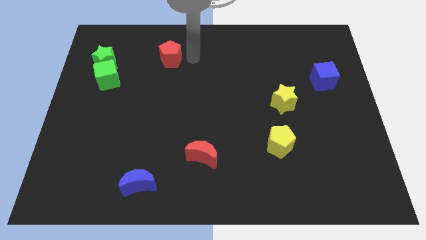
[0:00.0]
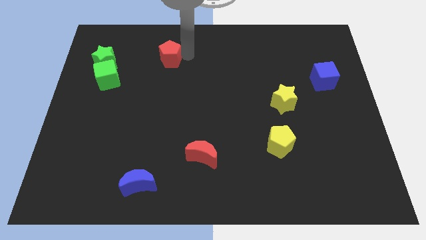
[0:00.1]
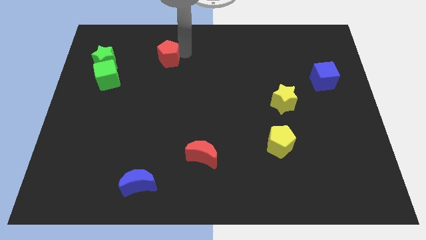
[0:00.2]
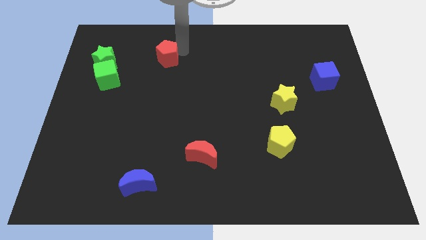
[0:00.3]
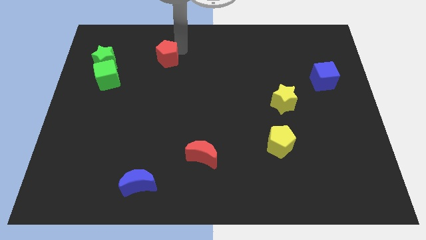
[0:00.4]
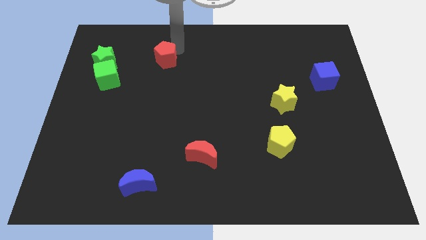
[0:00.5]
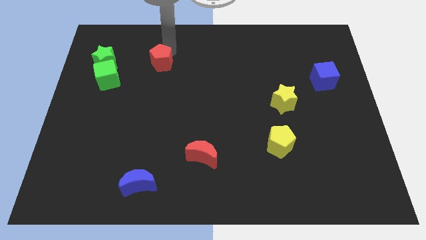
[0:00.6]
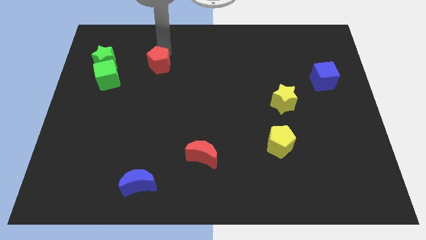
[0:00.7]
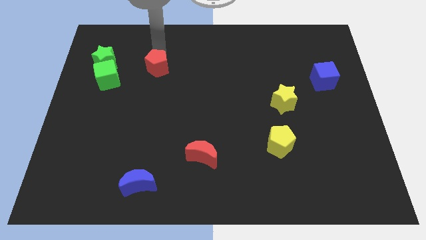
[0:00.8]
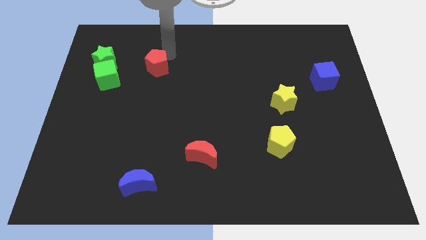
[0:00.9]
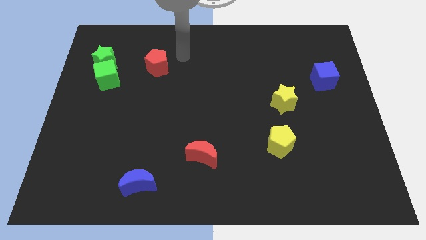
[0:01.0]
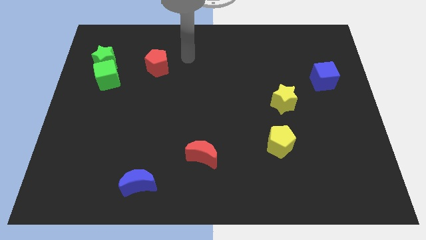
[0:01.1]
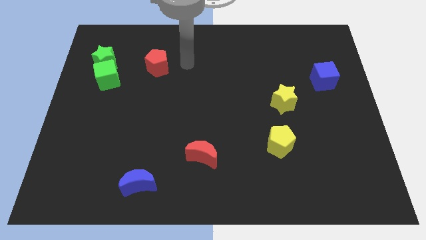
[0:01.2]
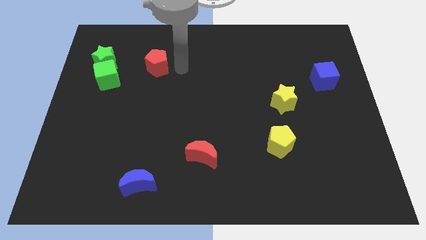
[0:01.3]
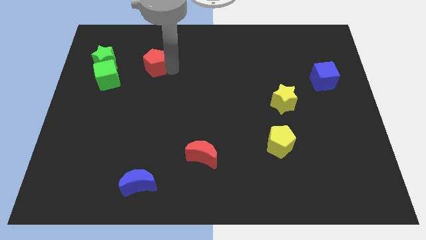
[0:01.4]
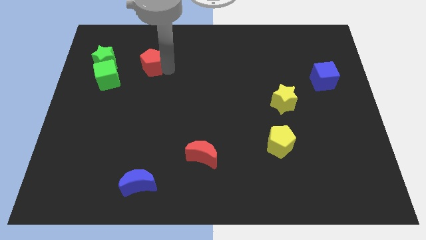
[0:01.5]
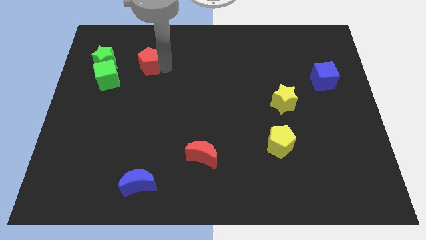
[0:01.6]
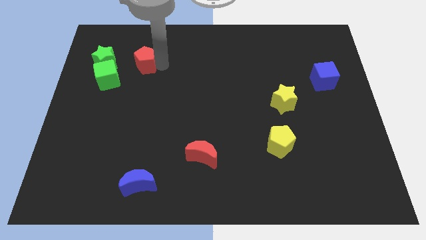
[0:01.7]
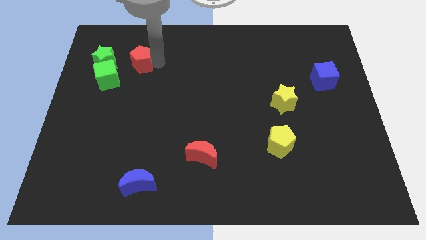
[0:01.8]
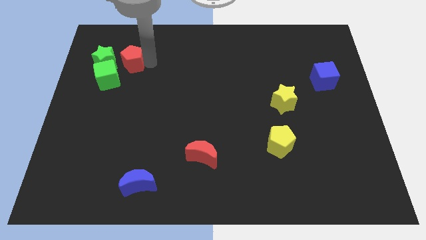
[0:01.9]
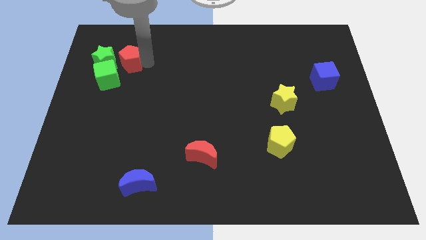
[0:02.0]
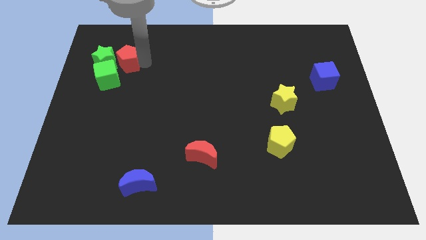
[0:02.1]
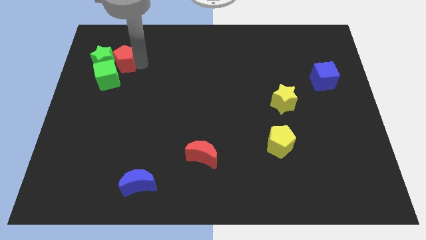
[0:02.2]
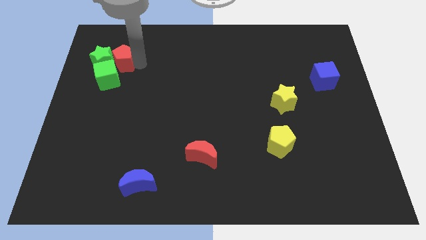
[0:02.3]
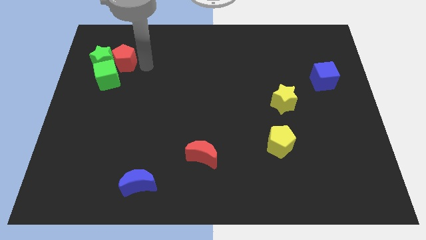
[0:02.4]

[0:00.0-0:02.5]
move the red pentagon to the right of the green star

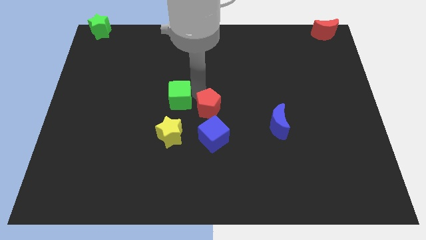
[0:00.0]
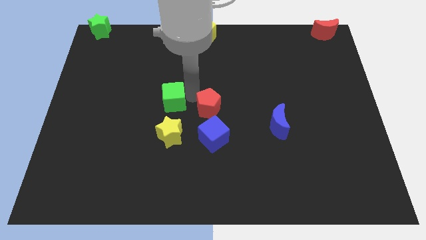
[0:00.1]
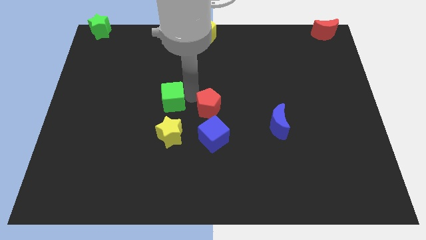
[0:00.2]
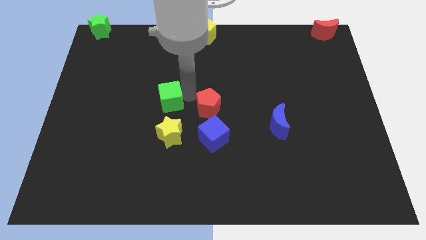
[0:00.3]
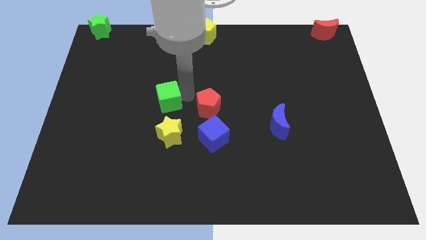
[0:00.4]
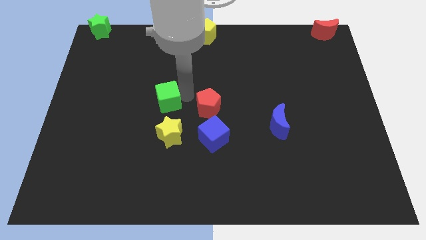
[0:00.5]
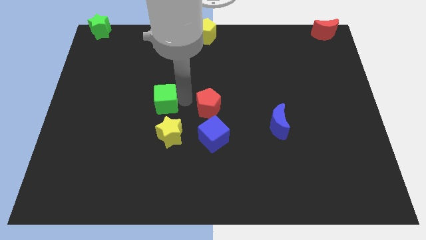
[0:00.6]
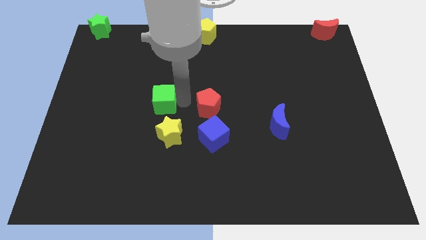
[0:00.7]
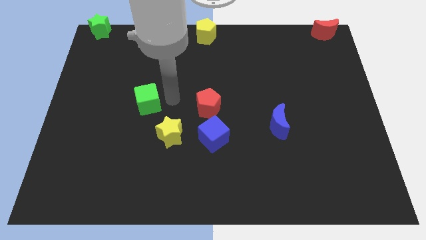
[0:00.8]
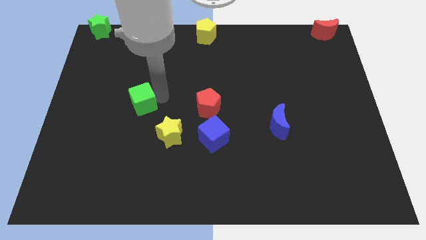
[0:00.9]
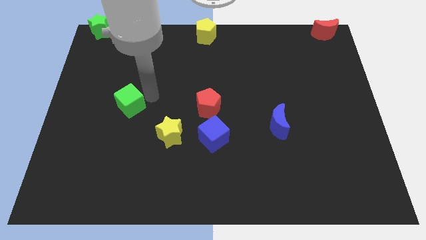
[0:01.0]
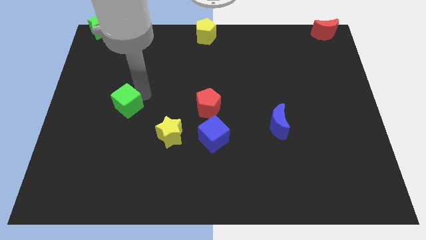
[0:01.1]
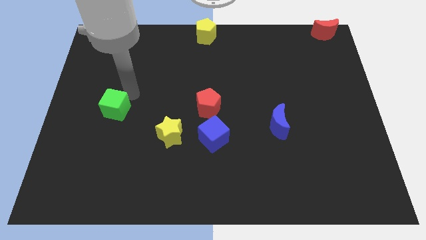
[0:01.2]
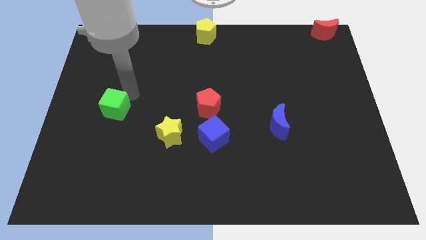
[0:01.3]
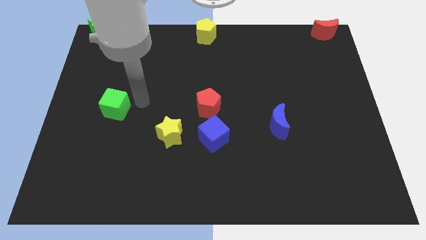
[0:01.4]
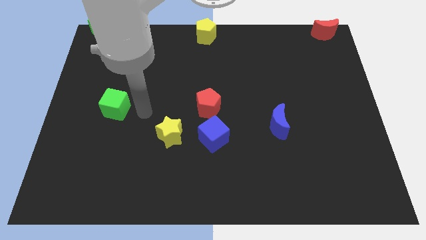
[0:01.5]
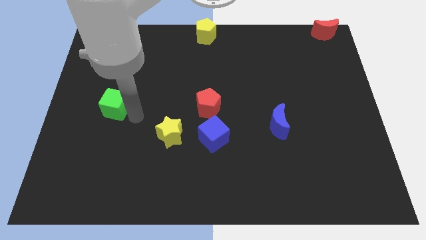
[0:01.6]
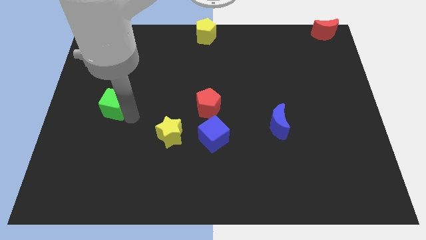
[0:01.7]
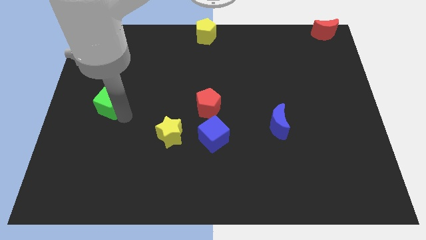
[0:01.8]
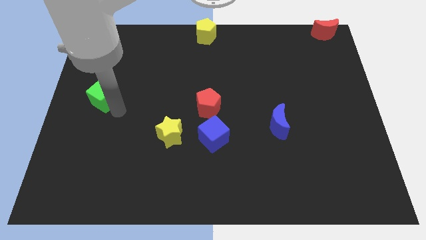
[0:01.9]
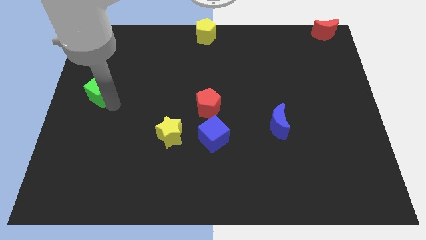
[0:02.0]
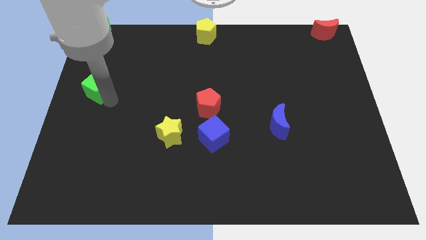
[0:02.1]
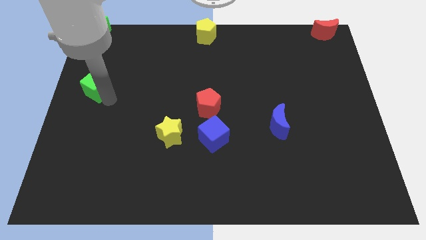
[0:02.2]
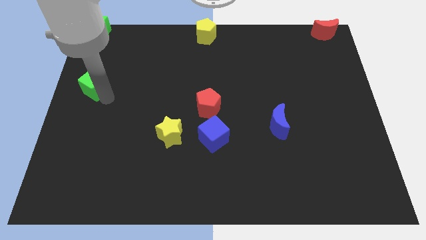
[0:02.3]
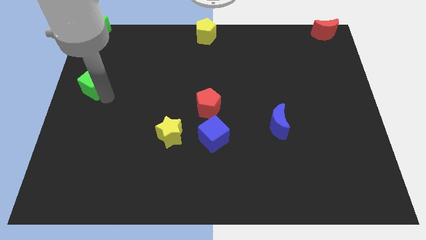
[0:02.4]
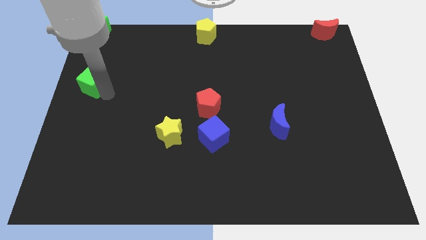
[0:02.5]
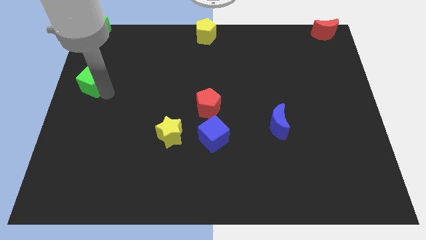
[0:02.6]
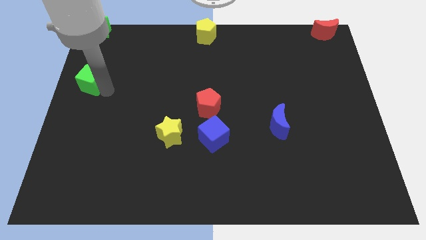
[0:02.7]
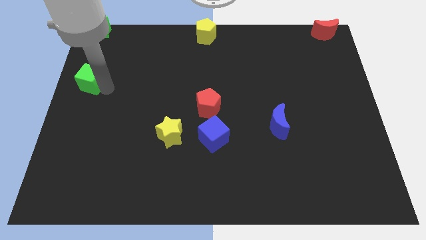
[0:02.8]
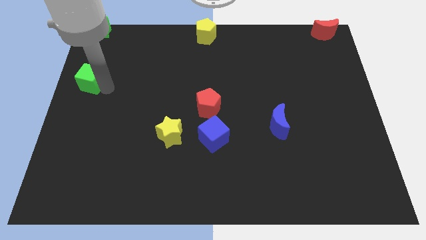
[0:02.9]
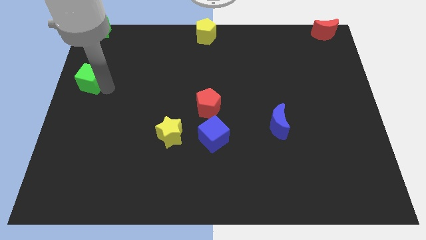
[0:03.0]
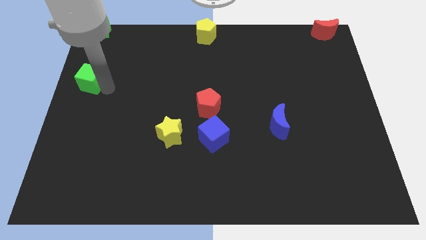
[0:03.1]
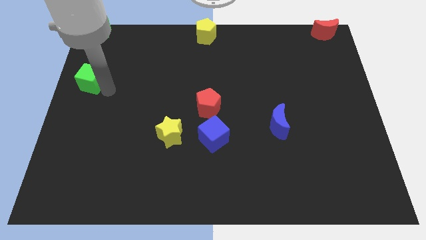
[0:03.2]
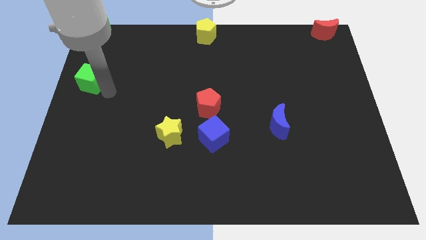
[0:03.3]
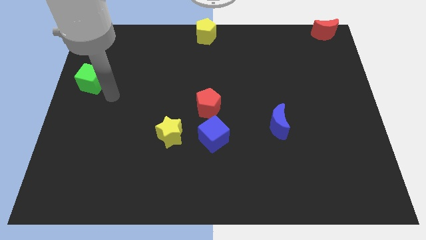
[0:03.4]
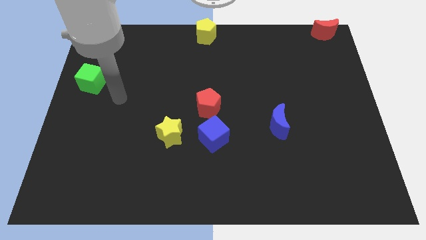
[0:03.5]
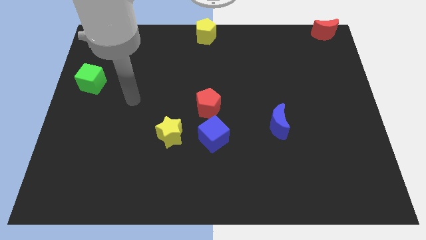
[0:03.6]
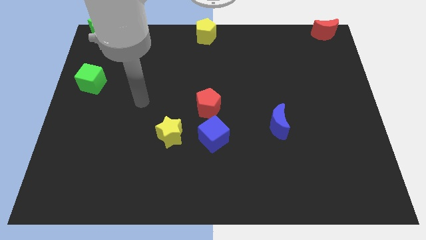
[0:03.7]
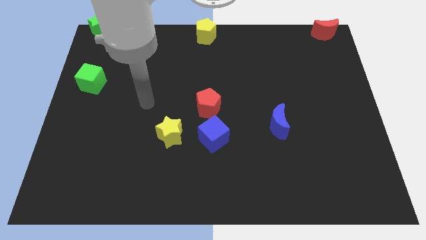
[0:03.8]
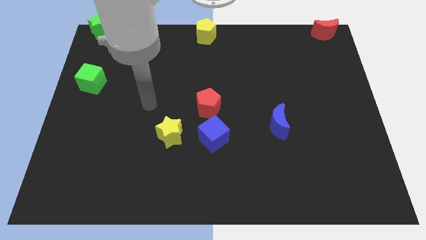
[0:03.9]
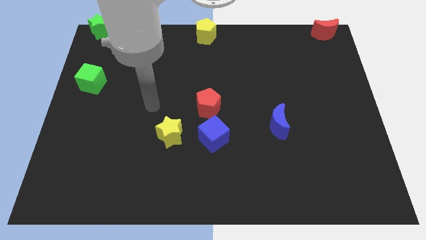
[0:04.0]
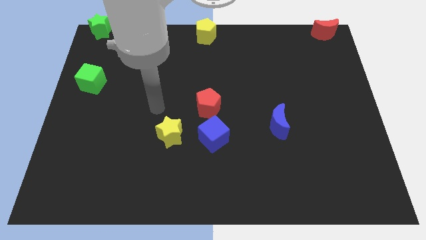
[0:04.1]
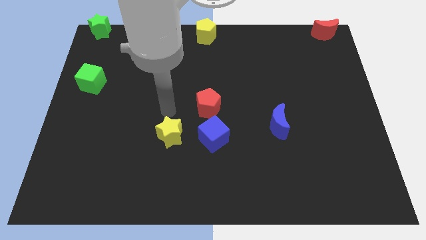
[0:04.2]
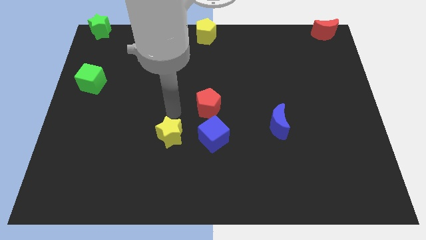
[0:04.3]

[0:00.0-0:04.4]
push green block apart from the red pentagon

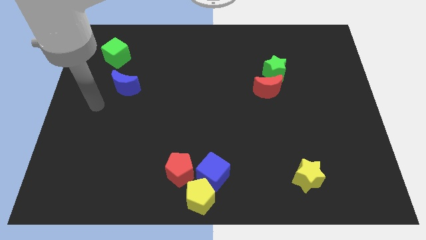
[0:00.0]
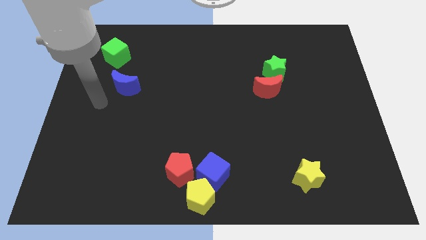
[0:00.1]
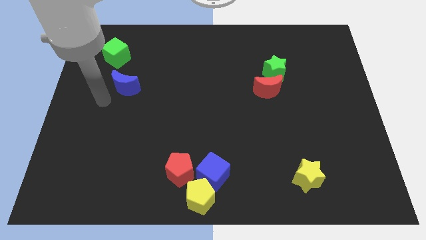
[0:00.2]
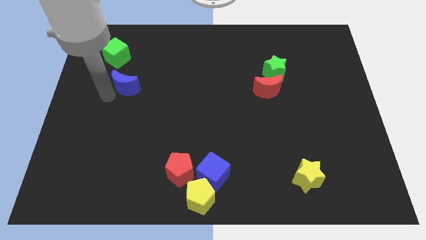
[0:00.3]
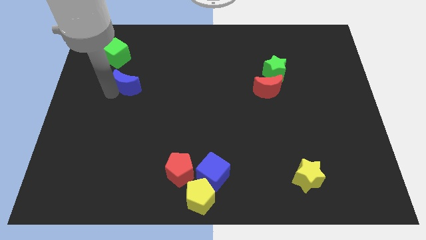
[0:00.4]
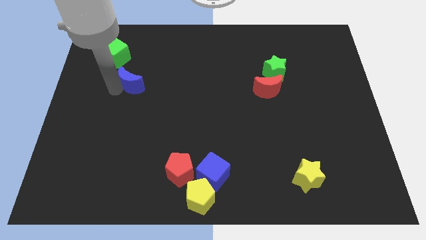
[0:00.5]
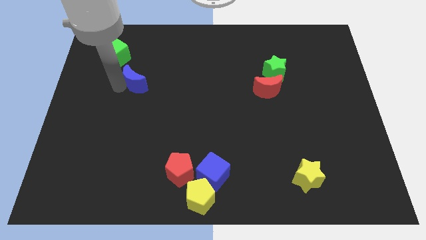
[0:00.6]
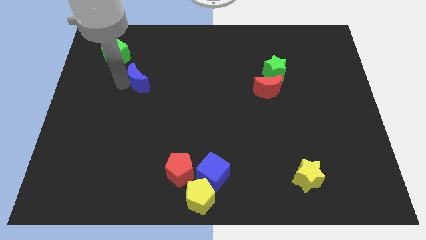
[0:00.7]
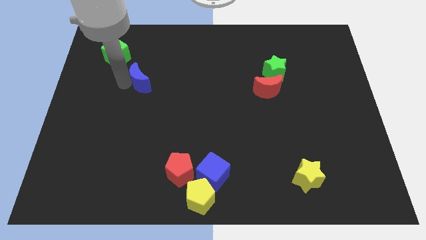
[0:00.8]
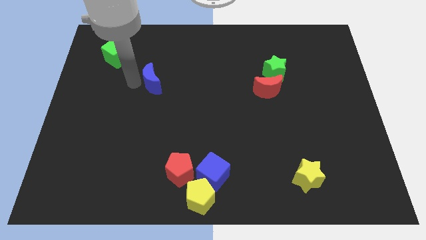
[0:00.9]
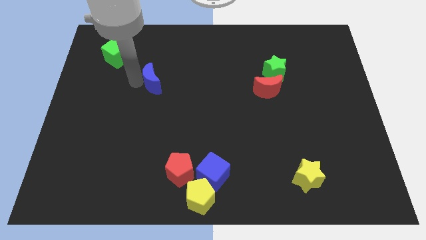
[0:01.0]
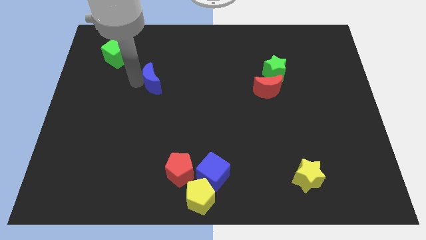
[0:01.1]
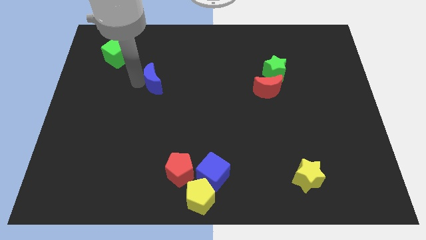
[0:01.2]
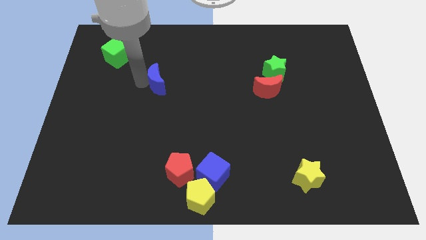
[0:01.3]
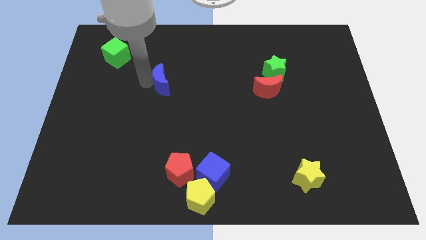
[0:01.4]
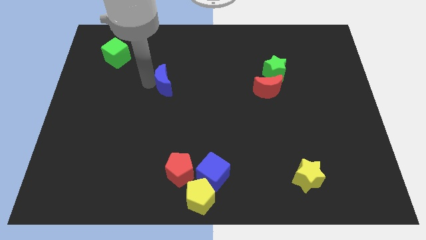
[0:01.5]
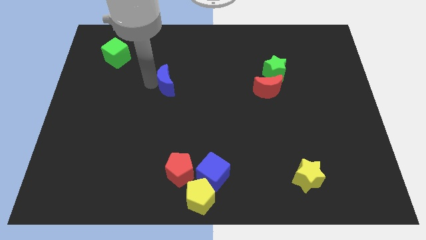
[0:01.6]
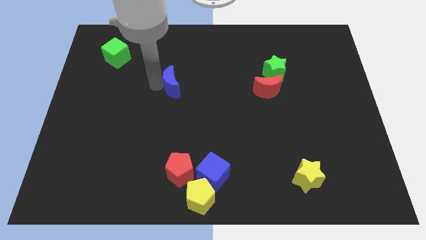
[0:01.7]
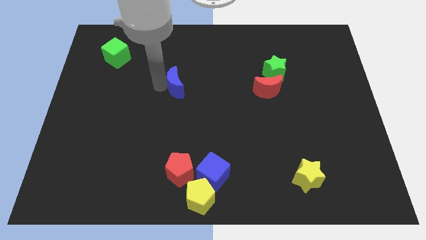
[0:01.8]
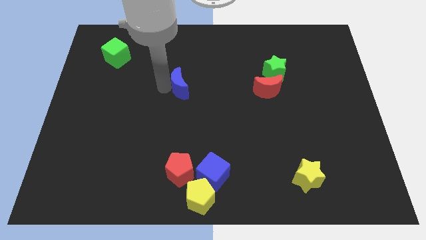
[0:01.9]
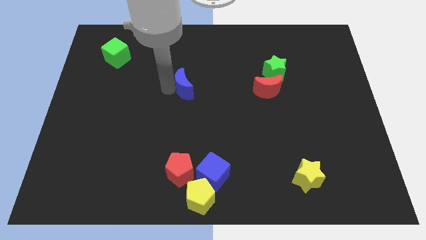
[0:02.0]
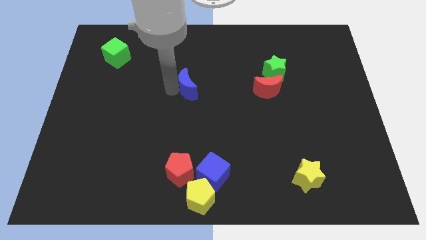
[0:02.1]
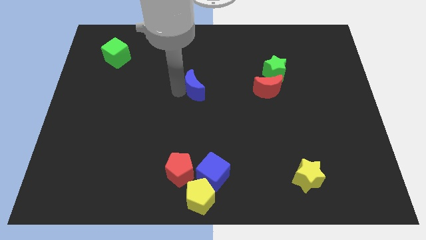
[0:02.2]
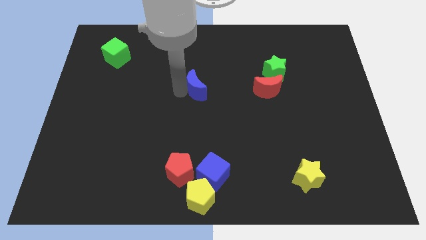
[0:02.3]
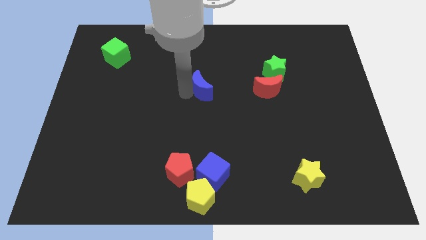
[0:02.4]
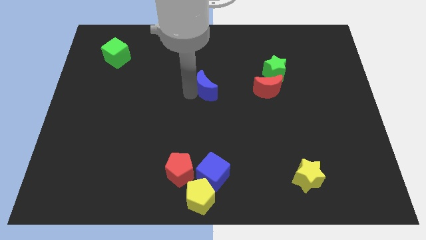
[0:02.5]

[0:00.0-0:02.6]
place blue moon parallel to red moon
